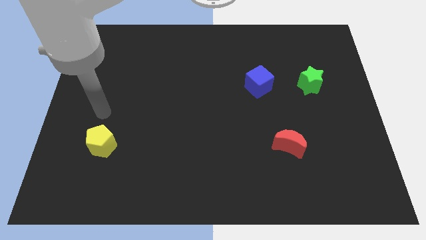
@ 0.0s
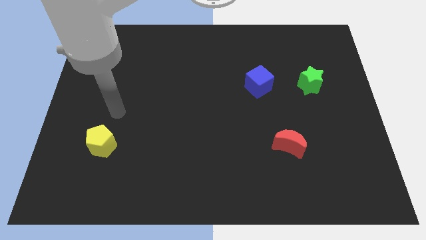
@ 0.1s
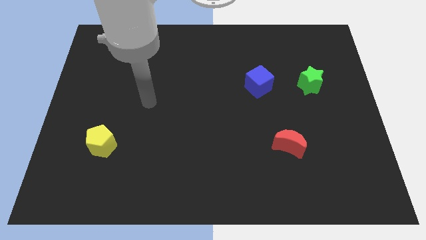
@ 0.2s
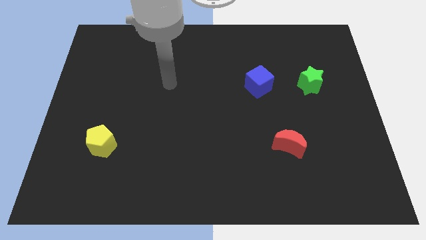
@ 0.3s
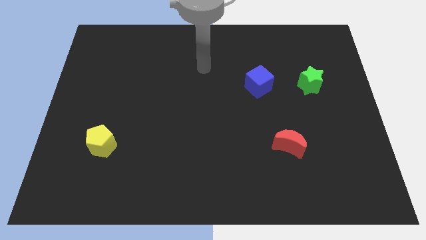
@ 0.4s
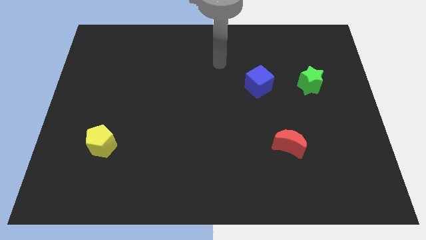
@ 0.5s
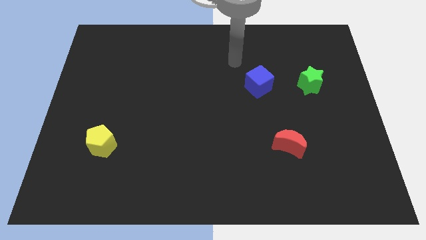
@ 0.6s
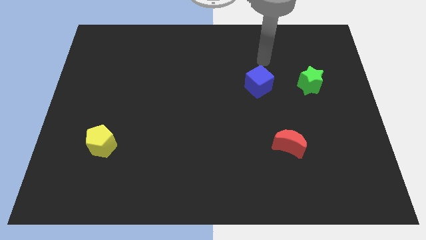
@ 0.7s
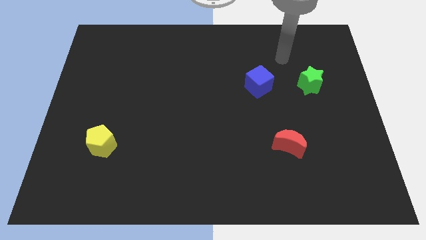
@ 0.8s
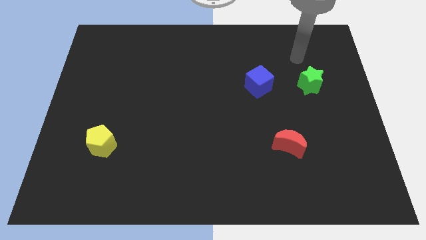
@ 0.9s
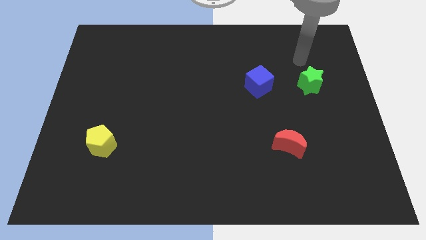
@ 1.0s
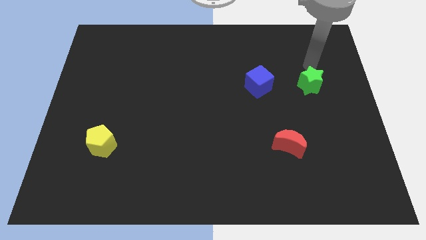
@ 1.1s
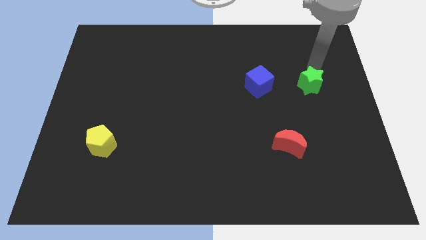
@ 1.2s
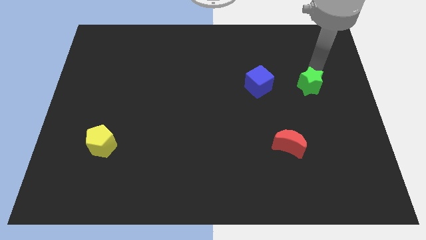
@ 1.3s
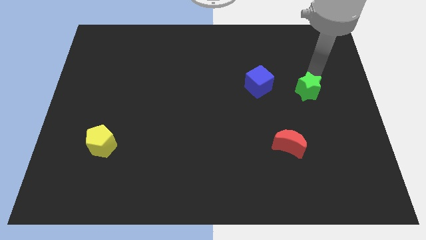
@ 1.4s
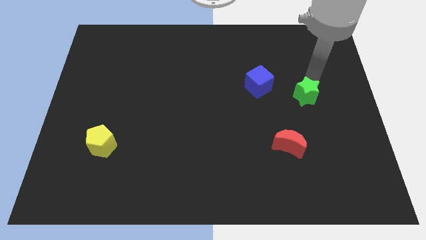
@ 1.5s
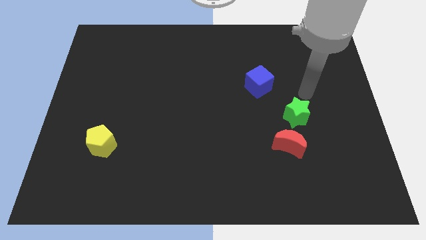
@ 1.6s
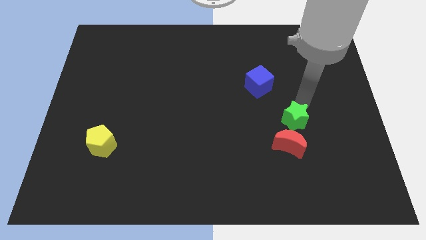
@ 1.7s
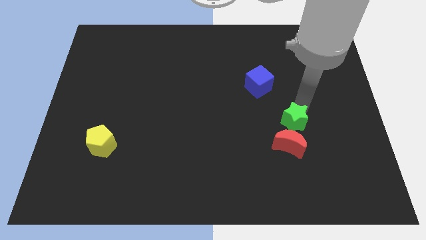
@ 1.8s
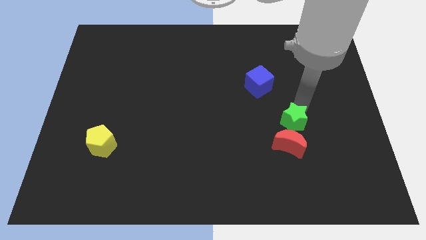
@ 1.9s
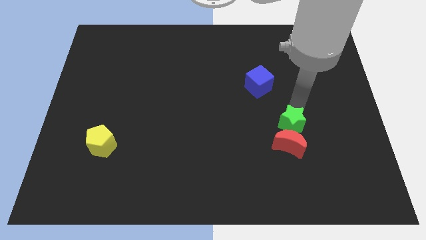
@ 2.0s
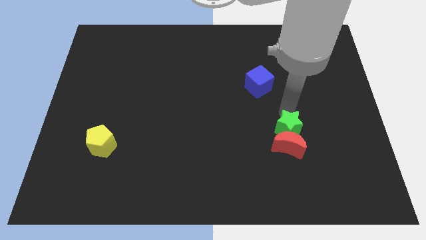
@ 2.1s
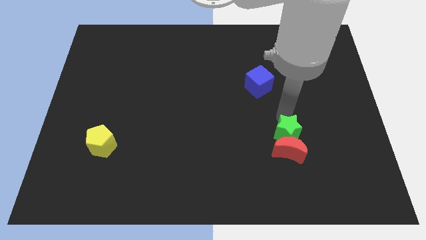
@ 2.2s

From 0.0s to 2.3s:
push the star next to the moon

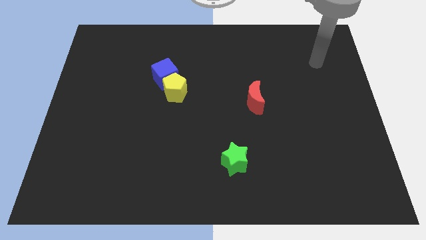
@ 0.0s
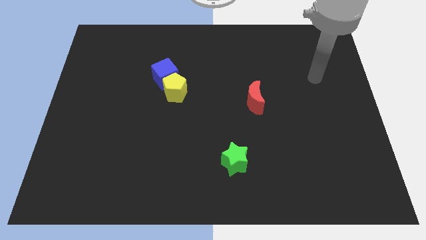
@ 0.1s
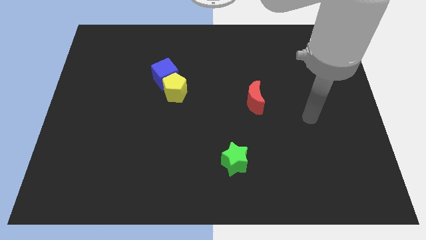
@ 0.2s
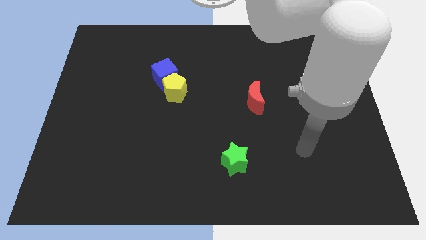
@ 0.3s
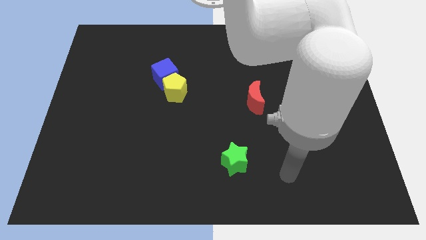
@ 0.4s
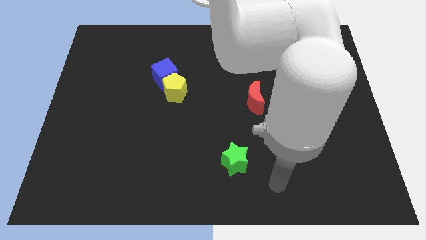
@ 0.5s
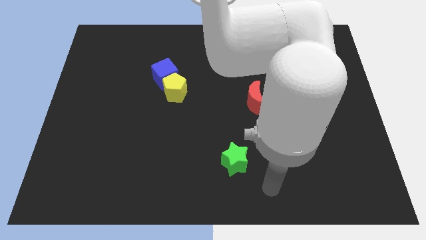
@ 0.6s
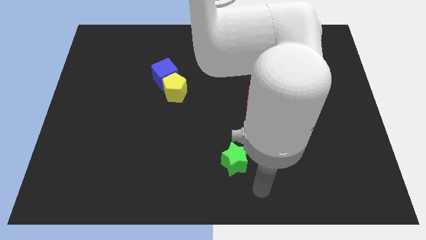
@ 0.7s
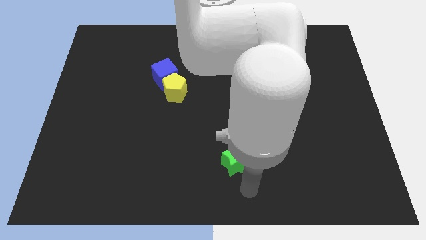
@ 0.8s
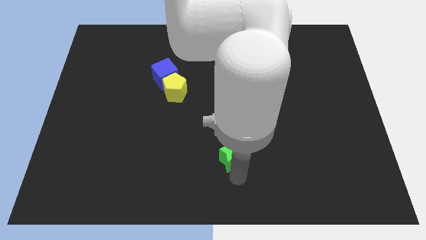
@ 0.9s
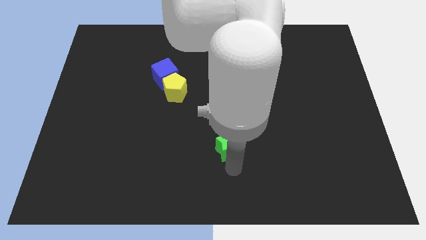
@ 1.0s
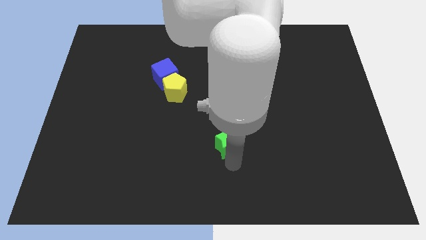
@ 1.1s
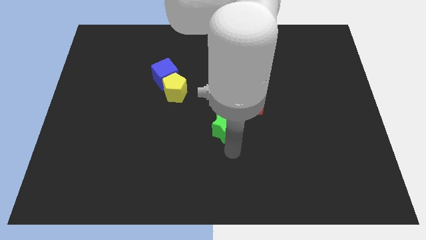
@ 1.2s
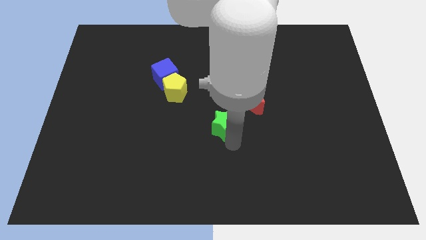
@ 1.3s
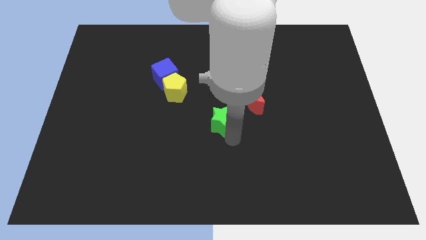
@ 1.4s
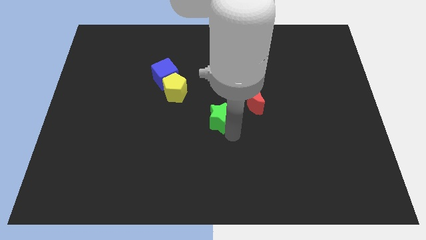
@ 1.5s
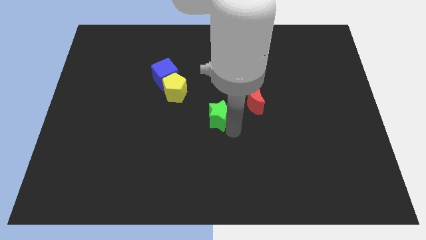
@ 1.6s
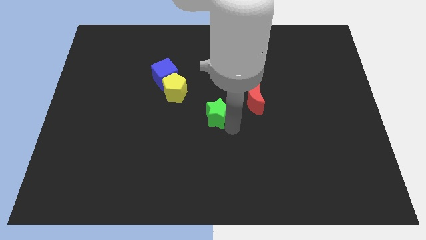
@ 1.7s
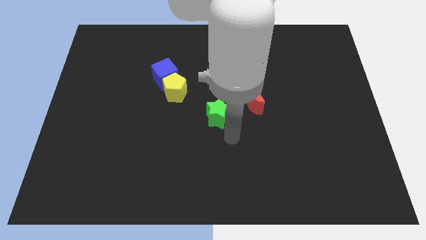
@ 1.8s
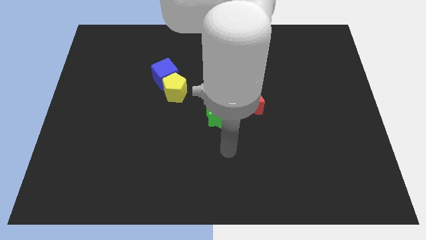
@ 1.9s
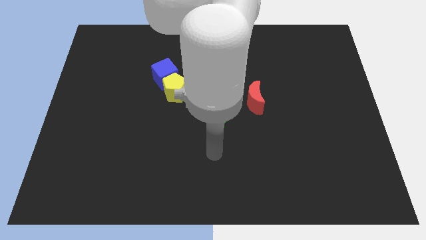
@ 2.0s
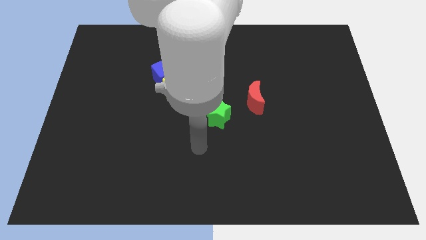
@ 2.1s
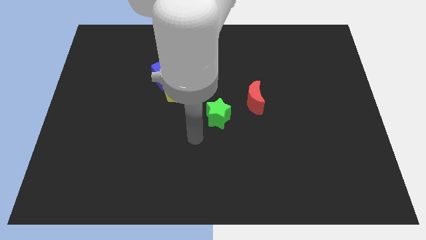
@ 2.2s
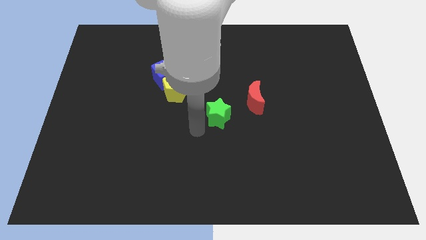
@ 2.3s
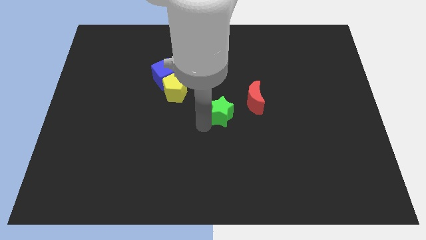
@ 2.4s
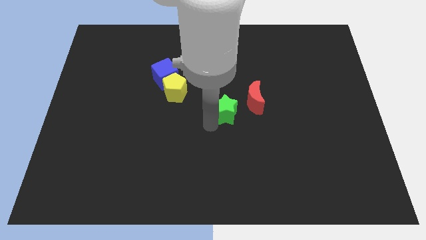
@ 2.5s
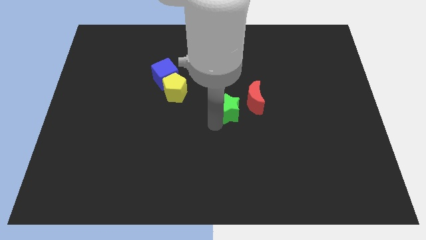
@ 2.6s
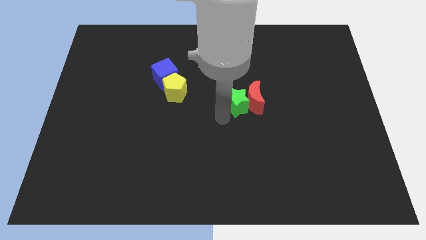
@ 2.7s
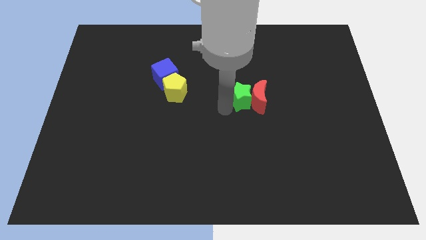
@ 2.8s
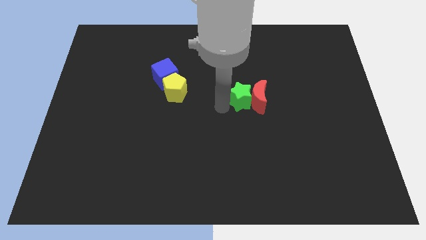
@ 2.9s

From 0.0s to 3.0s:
put the star next to the red moon

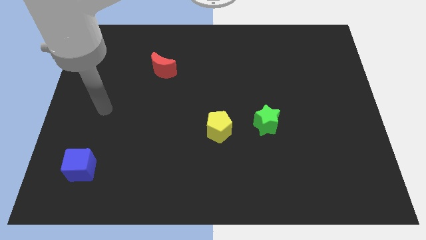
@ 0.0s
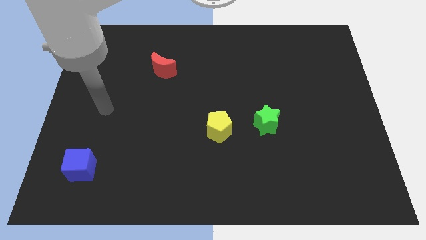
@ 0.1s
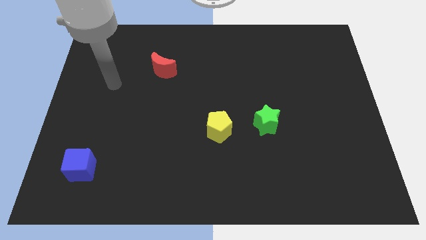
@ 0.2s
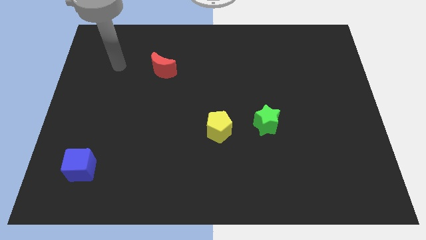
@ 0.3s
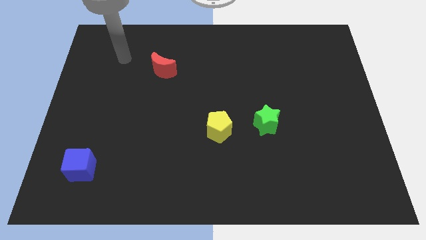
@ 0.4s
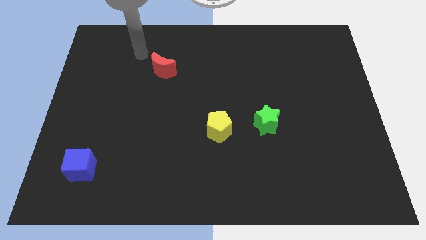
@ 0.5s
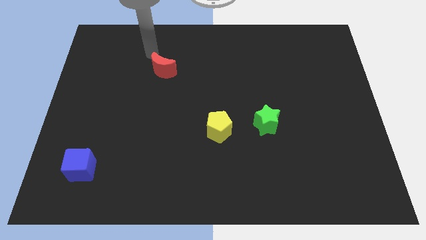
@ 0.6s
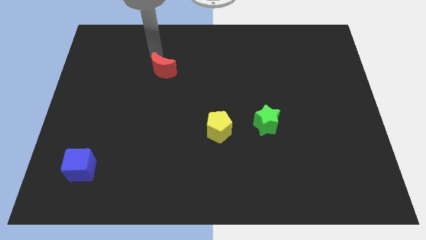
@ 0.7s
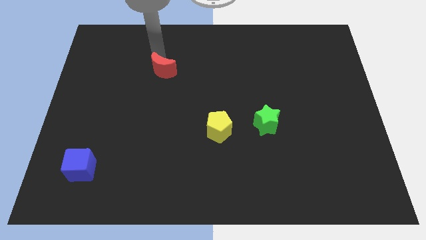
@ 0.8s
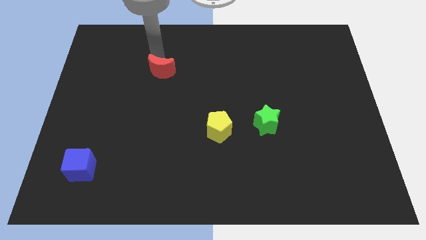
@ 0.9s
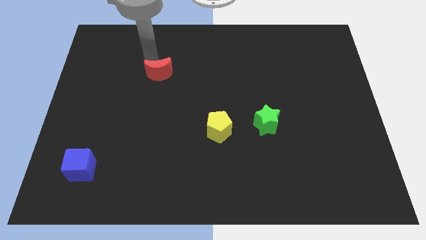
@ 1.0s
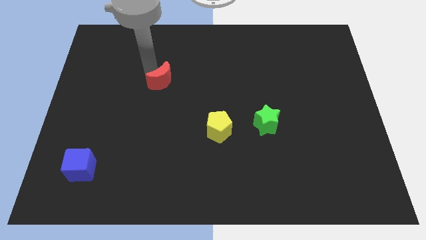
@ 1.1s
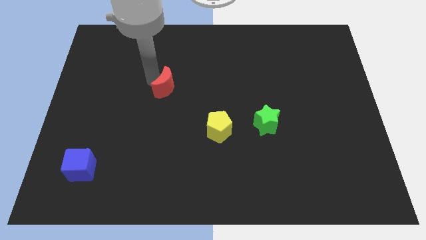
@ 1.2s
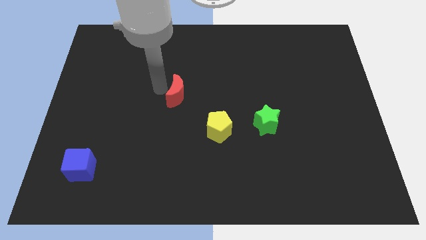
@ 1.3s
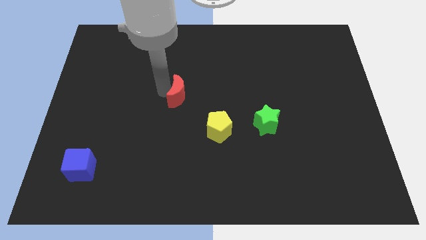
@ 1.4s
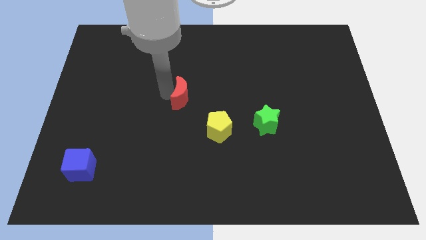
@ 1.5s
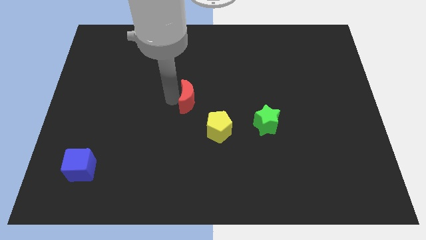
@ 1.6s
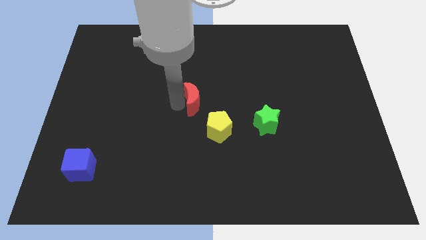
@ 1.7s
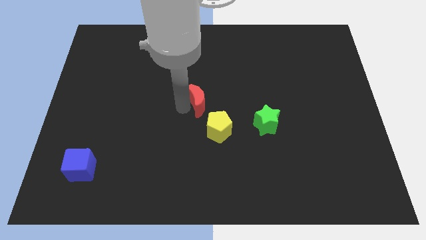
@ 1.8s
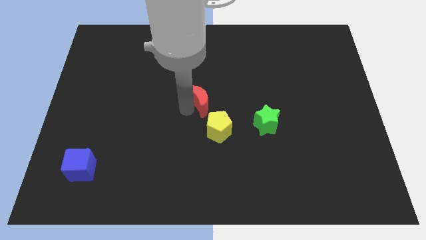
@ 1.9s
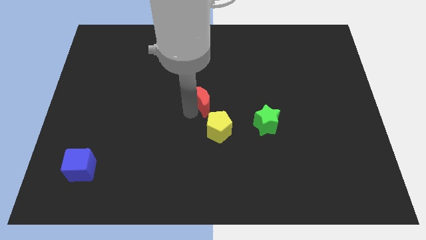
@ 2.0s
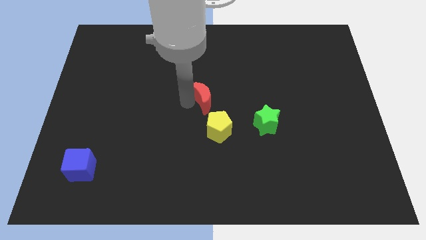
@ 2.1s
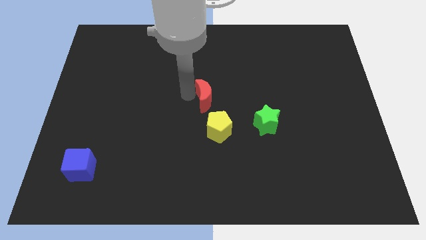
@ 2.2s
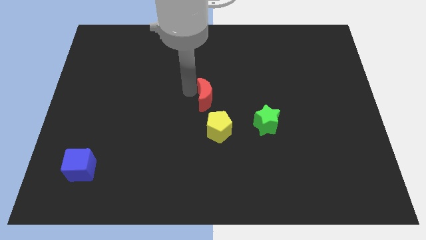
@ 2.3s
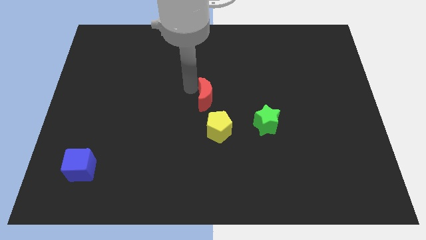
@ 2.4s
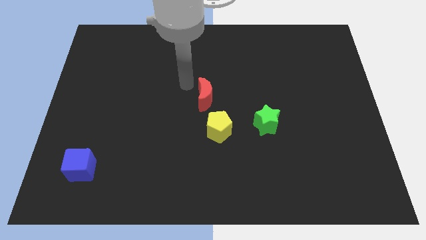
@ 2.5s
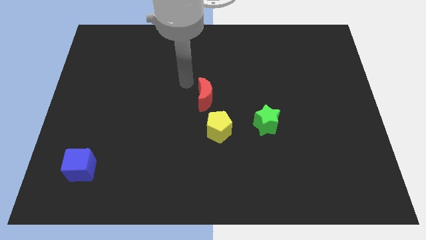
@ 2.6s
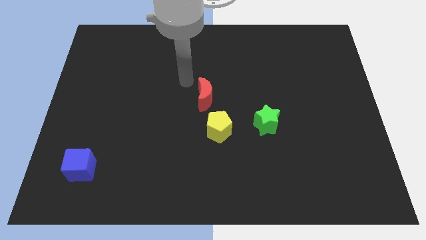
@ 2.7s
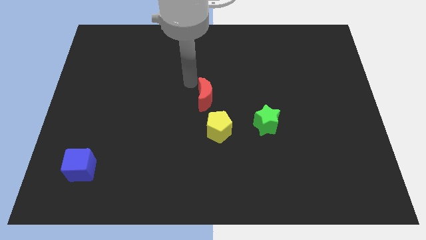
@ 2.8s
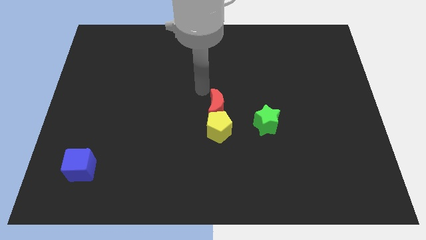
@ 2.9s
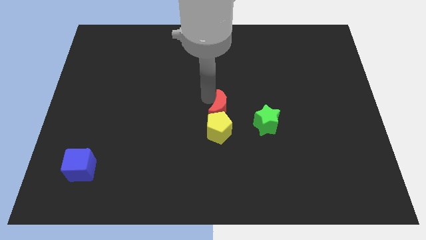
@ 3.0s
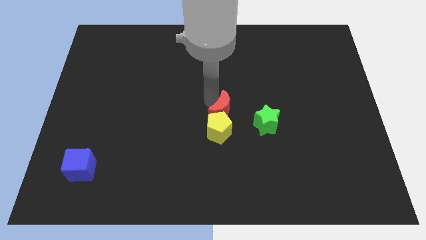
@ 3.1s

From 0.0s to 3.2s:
push the red block to the yellow block
